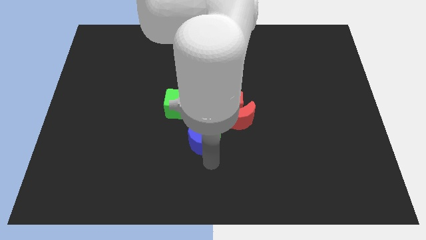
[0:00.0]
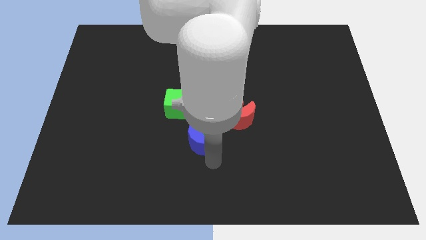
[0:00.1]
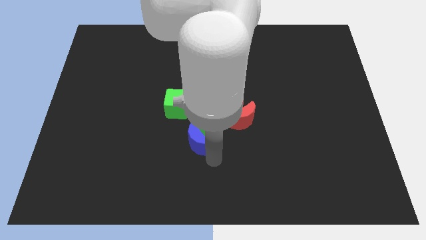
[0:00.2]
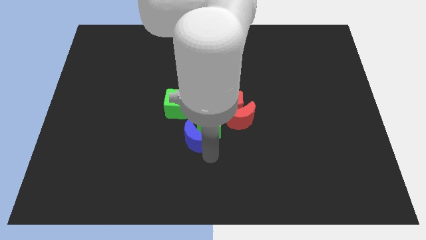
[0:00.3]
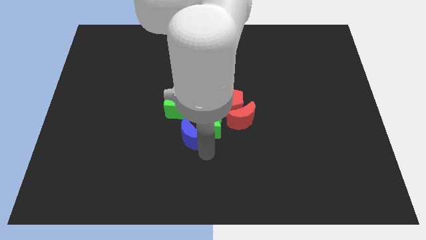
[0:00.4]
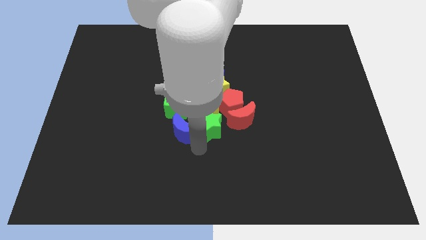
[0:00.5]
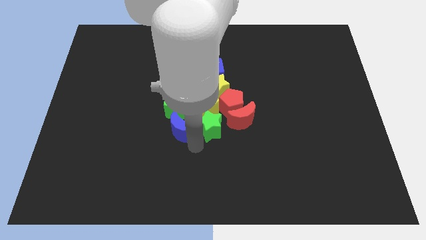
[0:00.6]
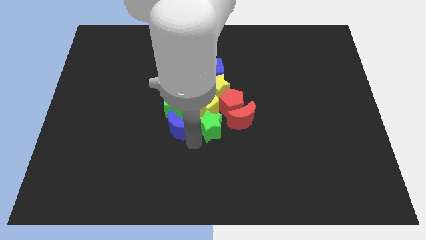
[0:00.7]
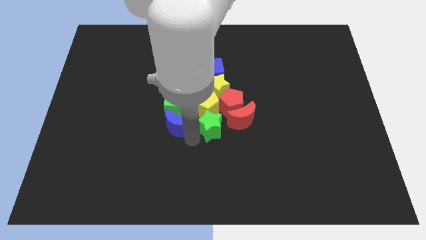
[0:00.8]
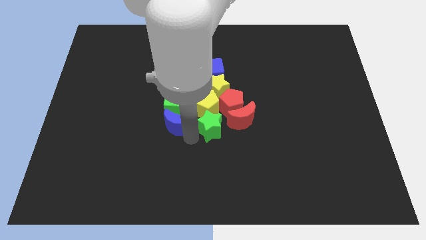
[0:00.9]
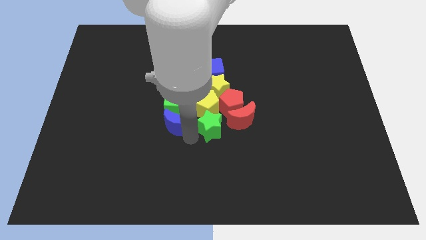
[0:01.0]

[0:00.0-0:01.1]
place the blue crescent below the green cube

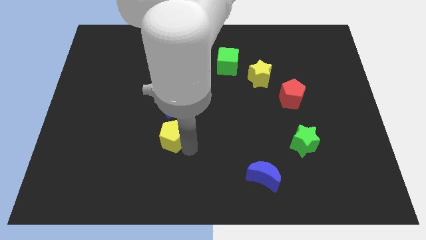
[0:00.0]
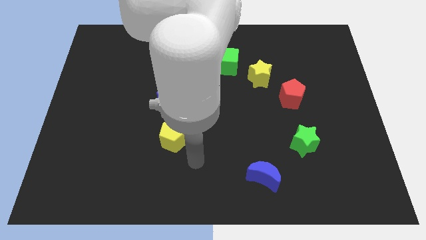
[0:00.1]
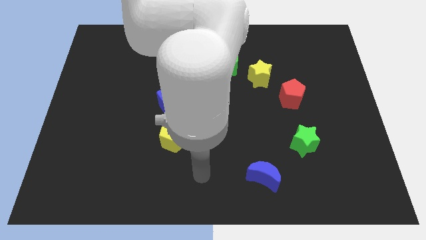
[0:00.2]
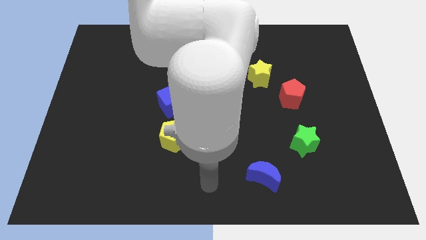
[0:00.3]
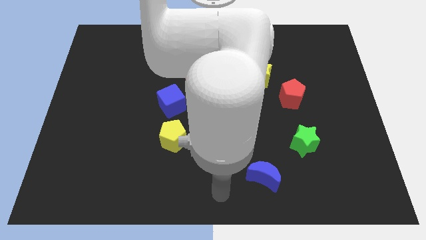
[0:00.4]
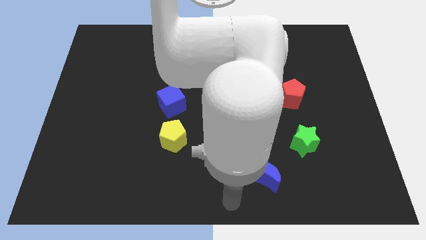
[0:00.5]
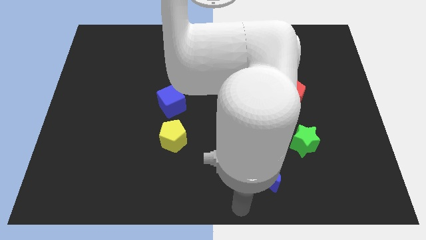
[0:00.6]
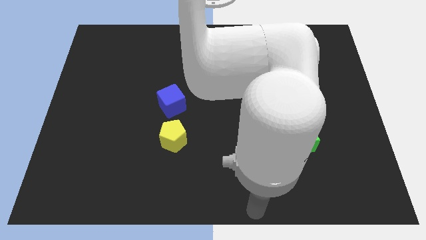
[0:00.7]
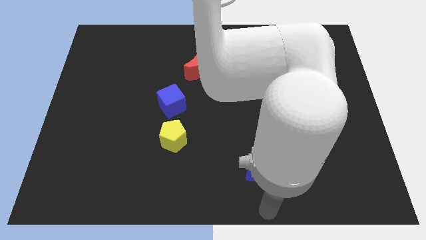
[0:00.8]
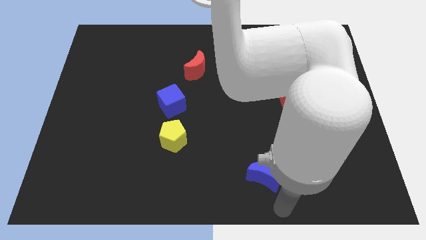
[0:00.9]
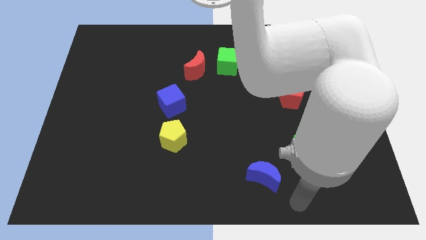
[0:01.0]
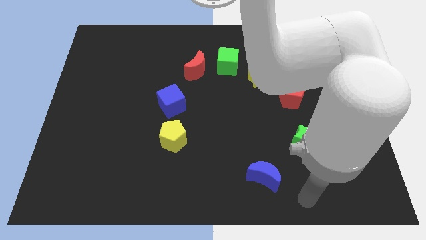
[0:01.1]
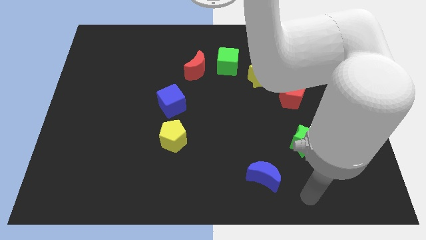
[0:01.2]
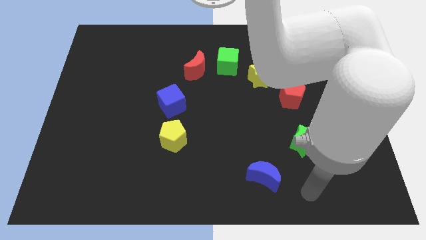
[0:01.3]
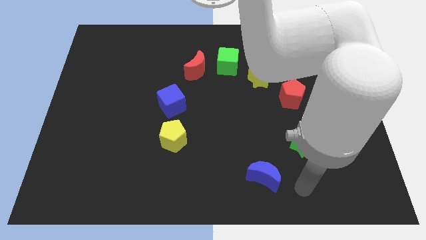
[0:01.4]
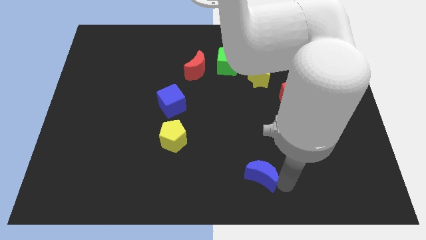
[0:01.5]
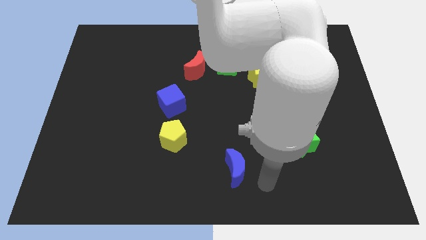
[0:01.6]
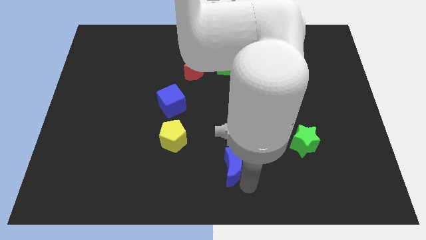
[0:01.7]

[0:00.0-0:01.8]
push the blue crescent slightly to the left

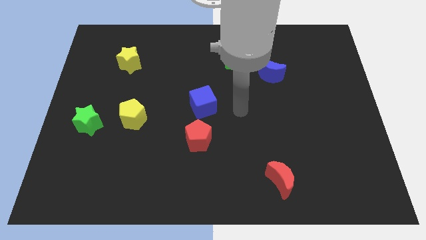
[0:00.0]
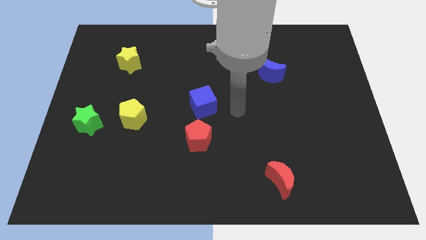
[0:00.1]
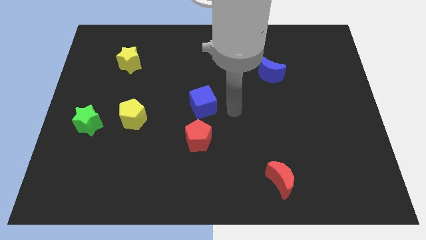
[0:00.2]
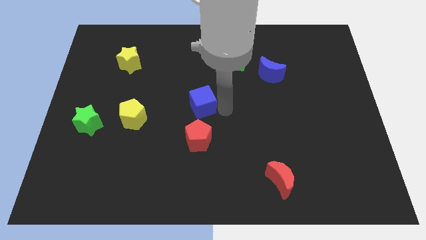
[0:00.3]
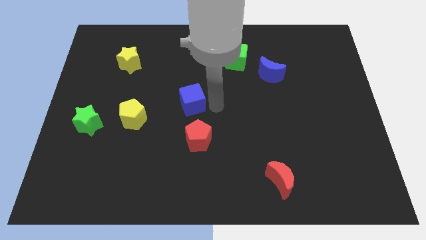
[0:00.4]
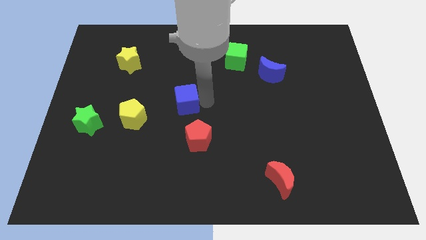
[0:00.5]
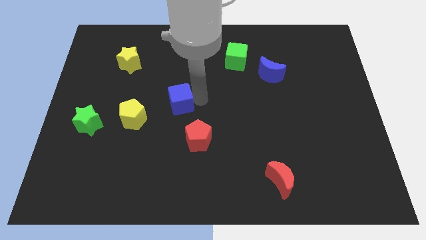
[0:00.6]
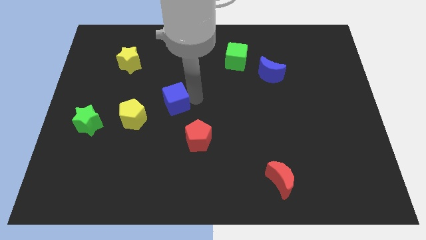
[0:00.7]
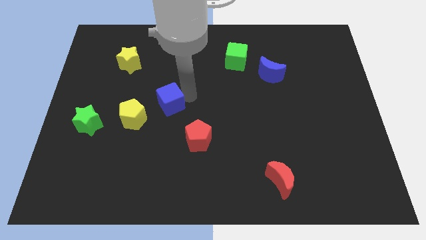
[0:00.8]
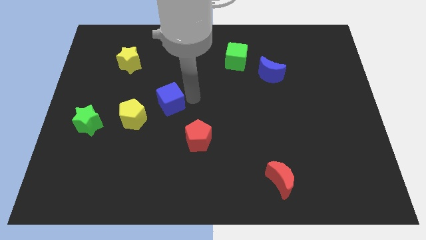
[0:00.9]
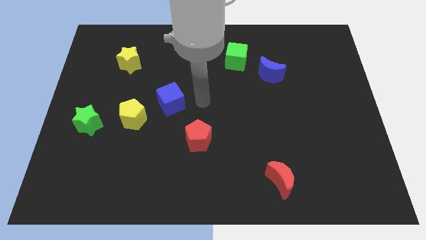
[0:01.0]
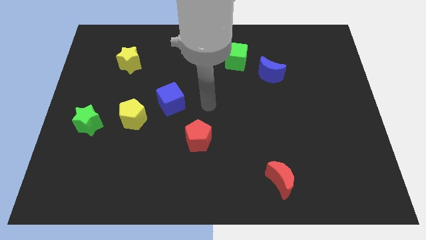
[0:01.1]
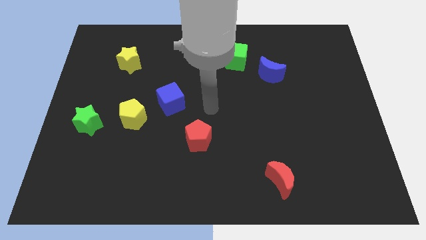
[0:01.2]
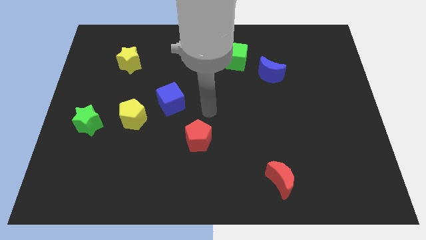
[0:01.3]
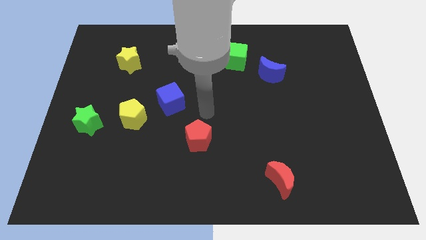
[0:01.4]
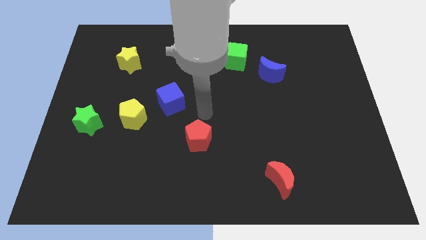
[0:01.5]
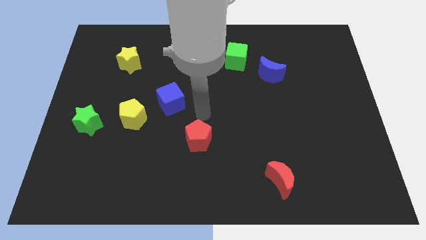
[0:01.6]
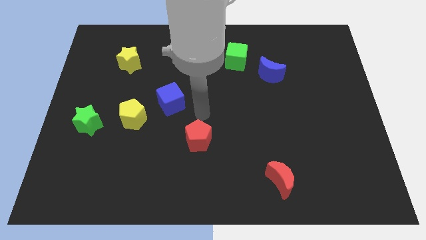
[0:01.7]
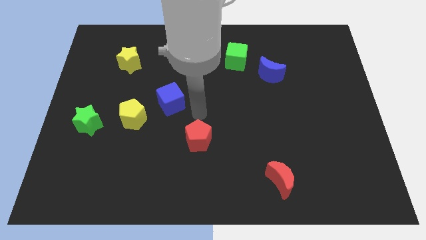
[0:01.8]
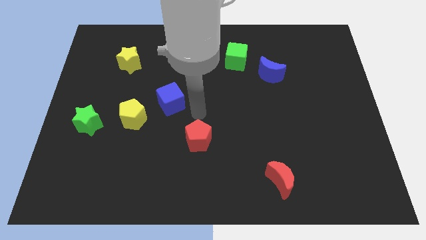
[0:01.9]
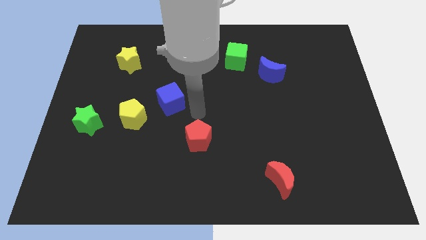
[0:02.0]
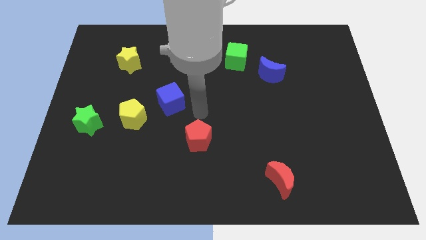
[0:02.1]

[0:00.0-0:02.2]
place the blue cube slightly close to yellow penatgon

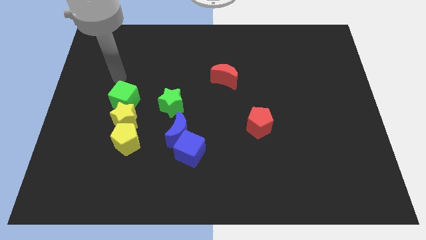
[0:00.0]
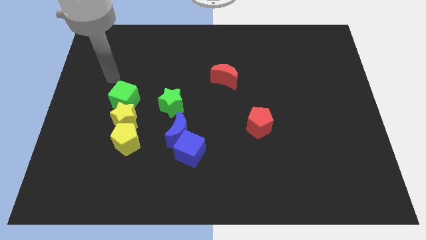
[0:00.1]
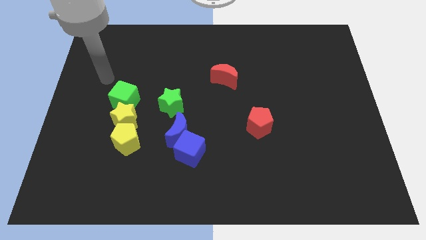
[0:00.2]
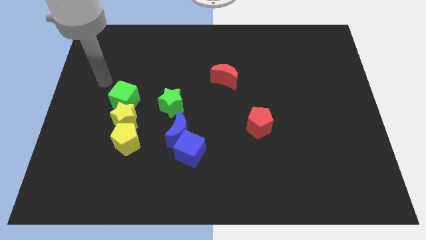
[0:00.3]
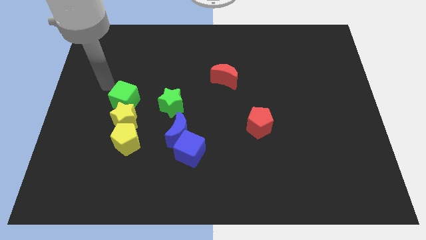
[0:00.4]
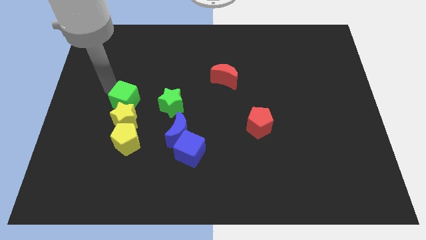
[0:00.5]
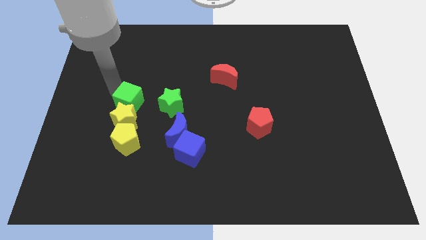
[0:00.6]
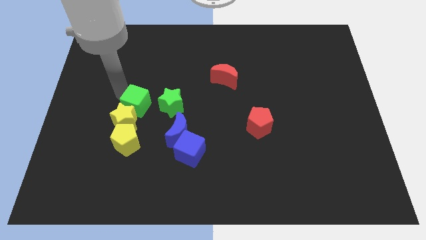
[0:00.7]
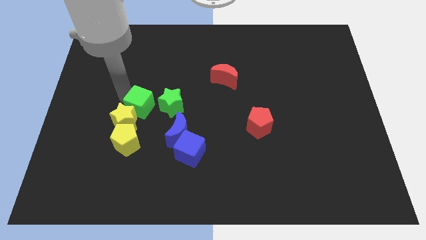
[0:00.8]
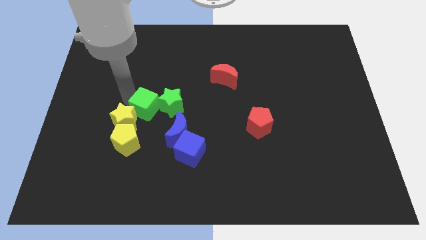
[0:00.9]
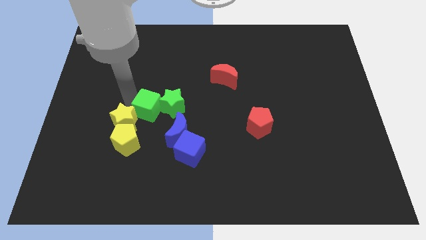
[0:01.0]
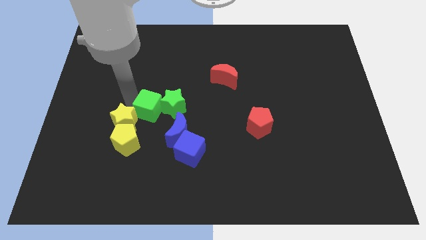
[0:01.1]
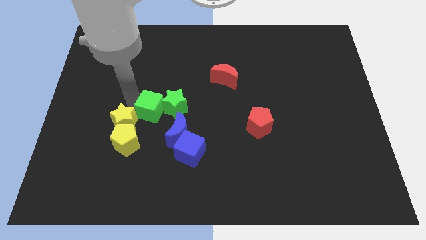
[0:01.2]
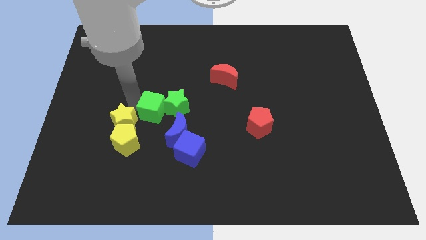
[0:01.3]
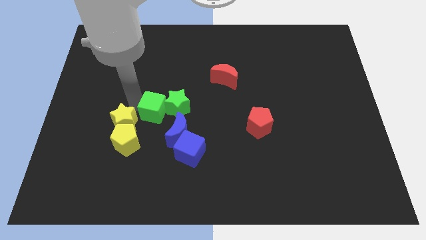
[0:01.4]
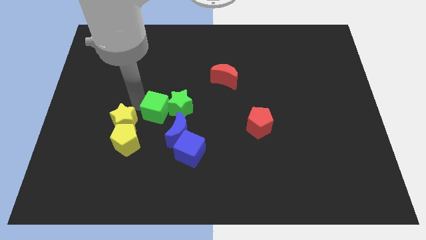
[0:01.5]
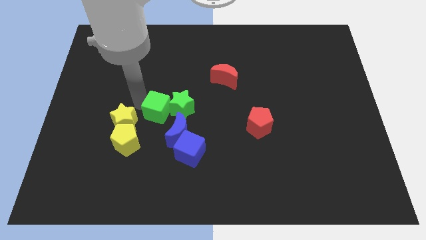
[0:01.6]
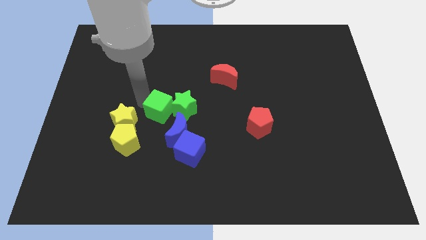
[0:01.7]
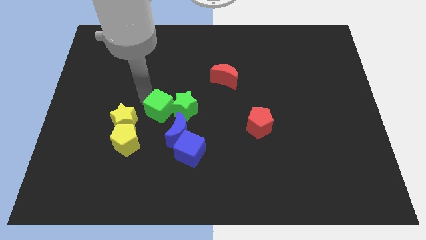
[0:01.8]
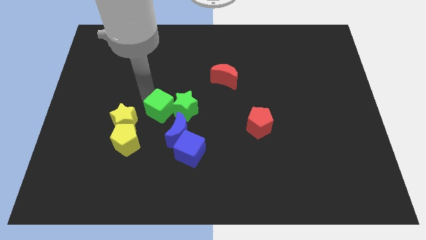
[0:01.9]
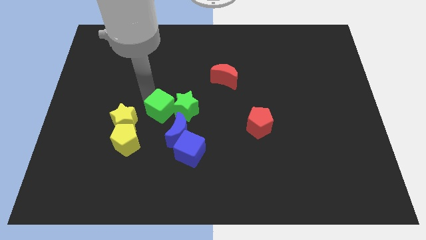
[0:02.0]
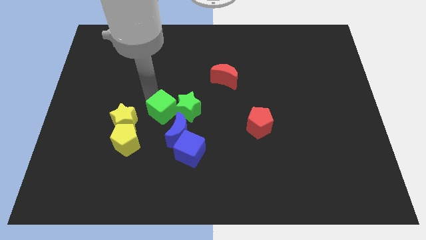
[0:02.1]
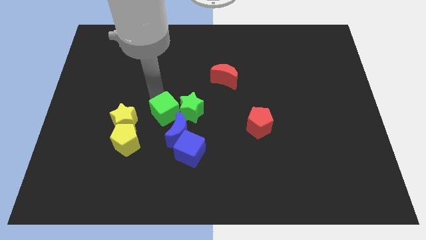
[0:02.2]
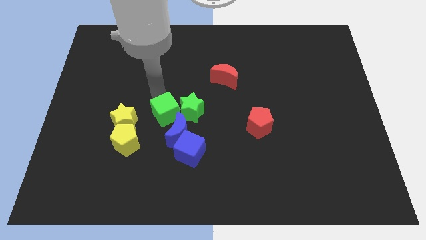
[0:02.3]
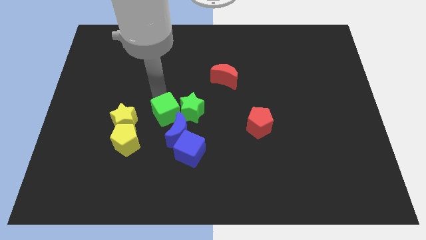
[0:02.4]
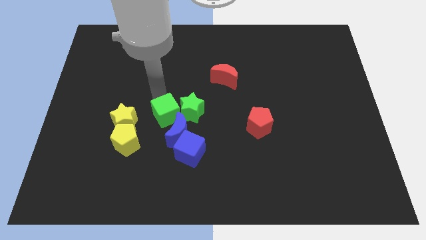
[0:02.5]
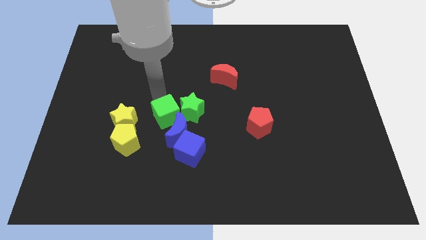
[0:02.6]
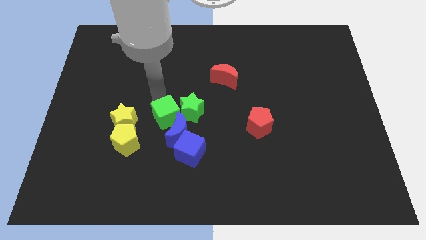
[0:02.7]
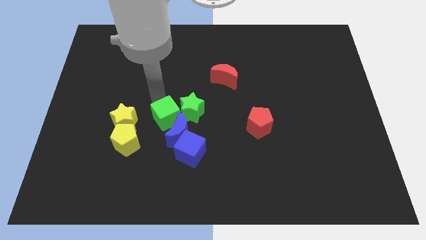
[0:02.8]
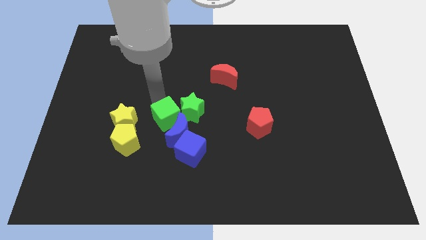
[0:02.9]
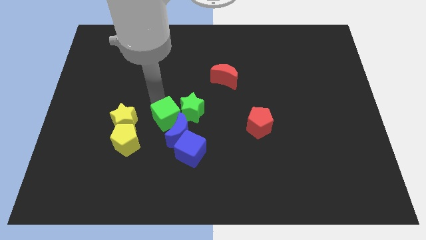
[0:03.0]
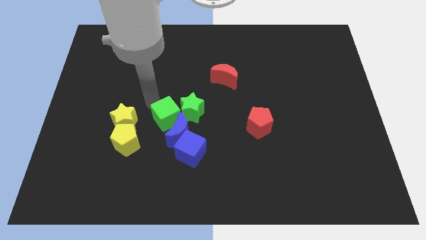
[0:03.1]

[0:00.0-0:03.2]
move the green cube diagonal to the blue crescent at the top left side

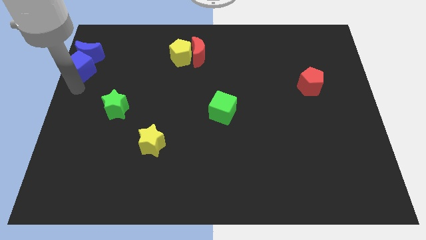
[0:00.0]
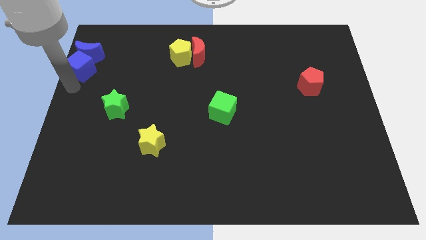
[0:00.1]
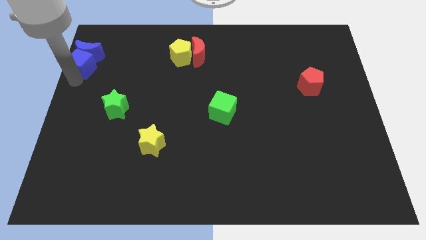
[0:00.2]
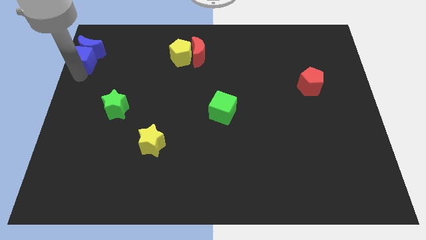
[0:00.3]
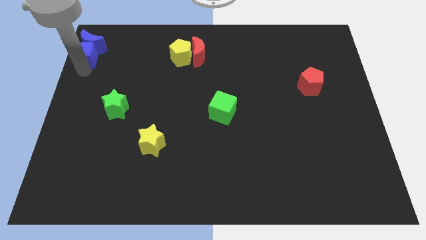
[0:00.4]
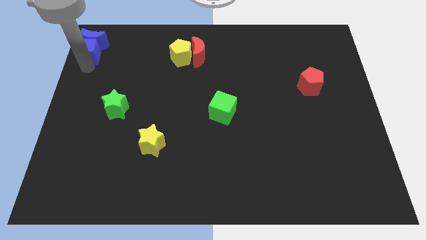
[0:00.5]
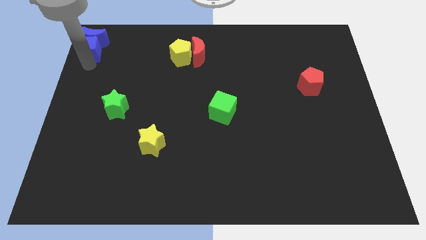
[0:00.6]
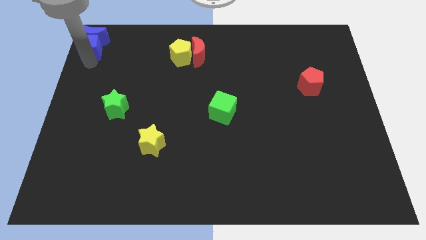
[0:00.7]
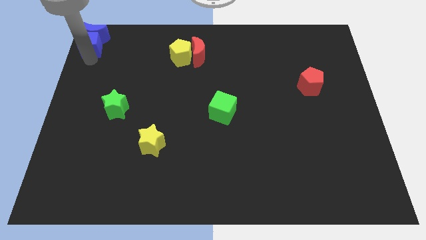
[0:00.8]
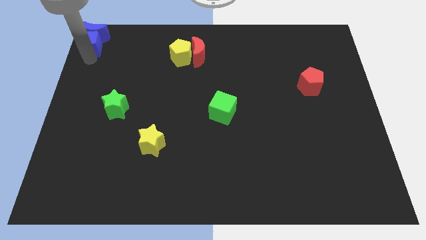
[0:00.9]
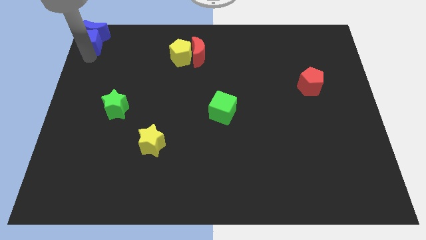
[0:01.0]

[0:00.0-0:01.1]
slide blue blocks at top left corner
